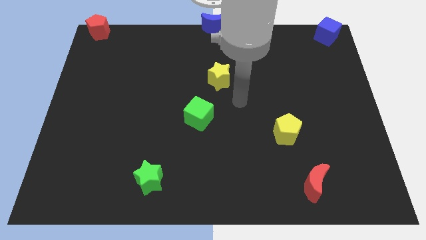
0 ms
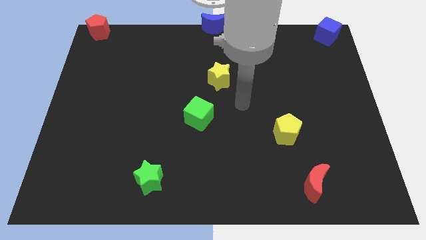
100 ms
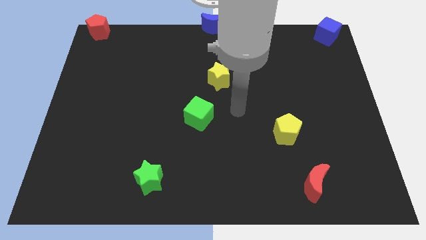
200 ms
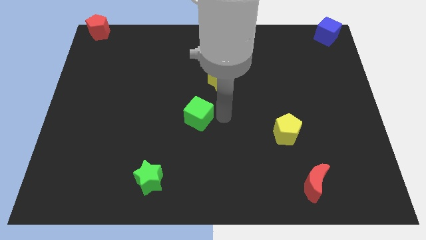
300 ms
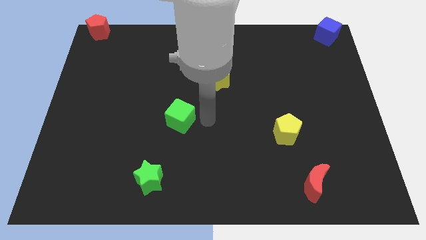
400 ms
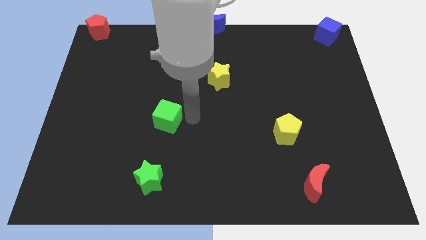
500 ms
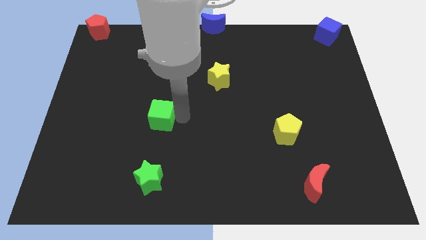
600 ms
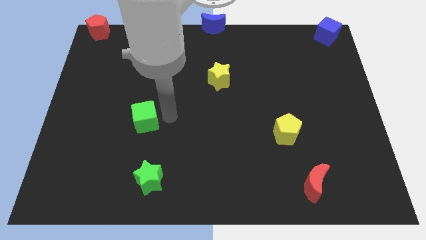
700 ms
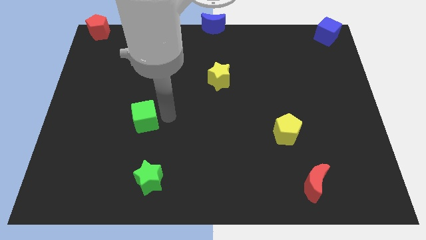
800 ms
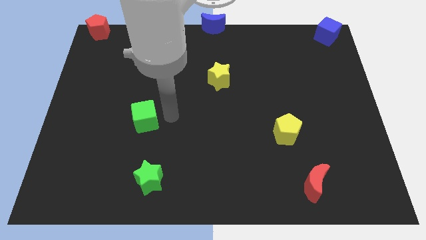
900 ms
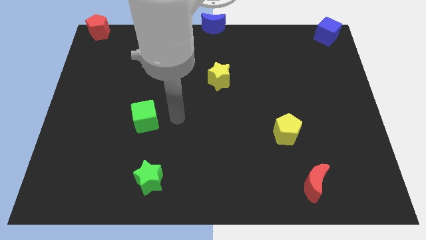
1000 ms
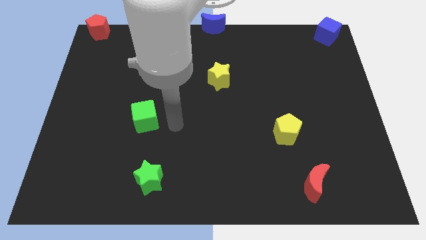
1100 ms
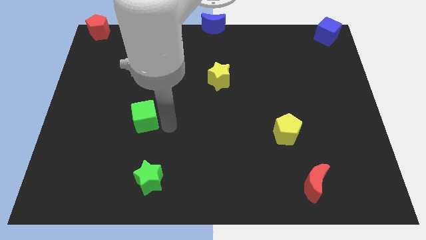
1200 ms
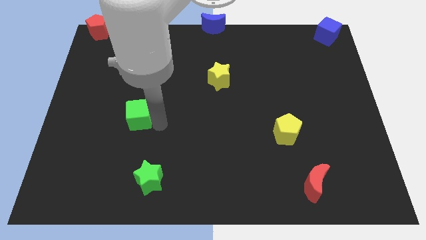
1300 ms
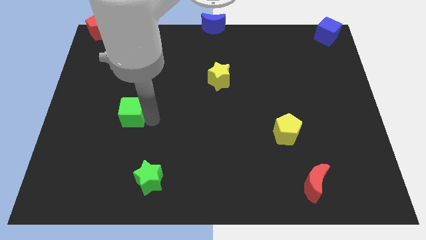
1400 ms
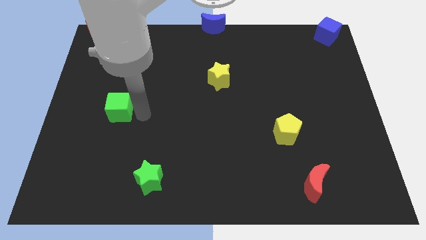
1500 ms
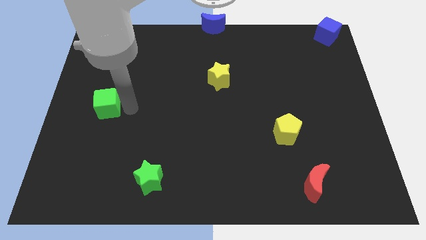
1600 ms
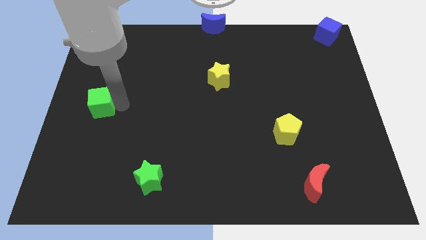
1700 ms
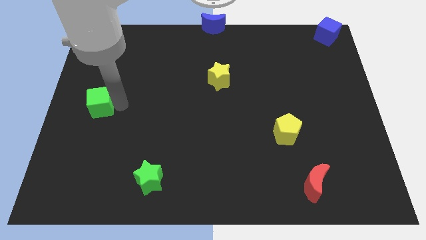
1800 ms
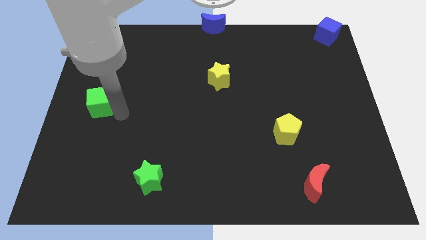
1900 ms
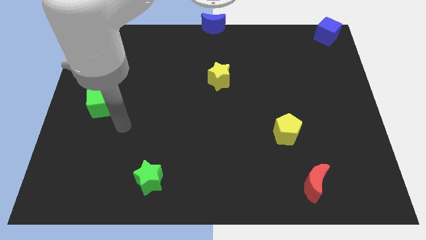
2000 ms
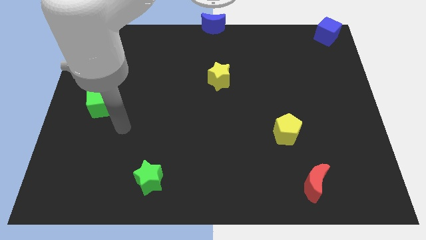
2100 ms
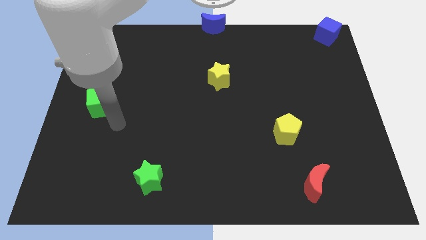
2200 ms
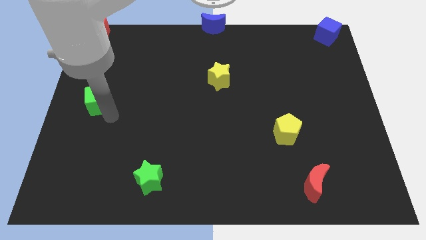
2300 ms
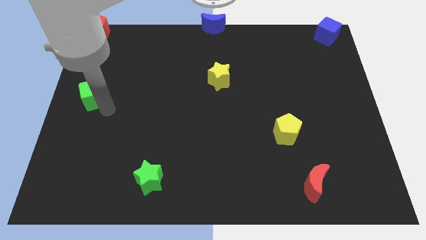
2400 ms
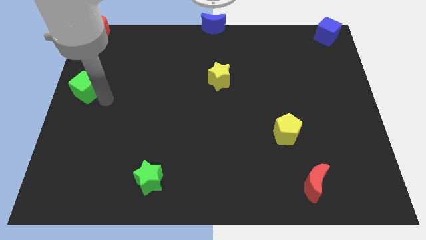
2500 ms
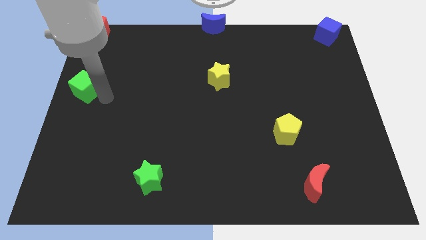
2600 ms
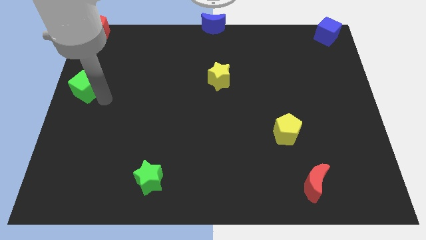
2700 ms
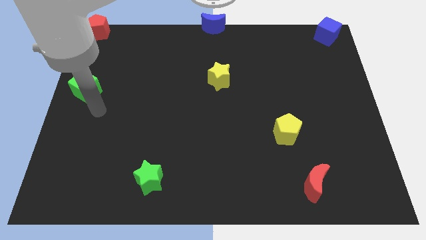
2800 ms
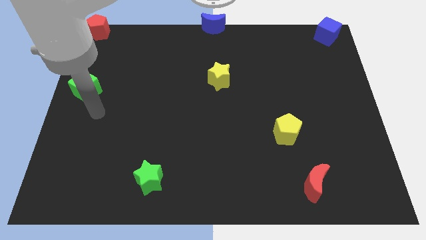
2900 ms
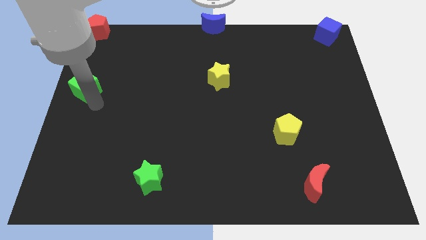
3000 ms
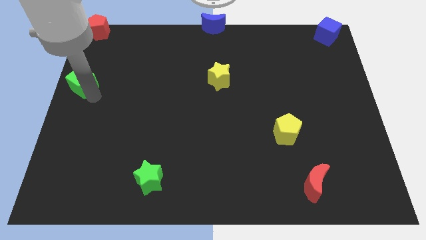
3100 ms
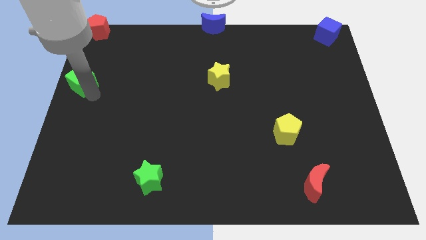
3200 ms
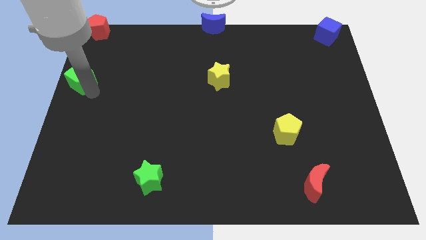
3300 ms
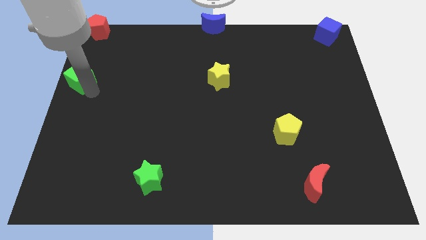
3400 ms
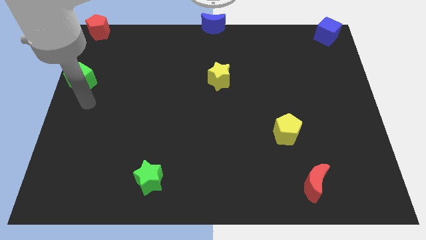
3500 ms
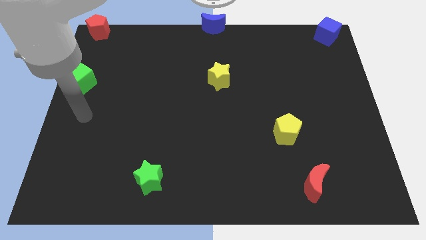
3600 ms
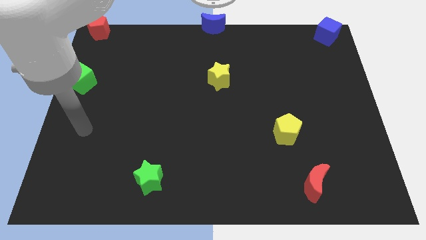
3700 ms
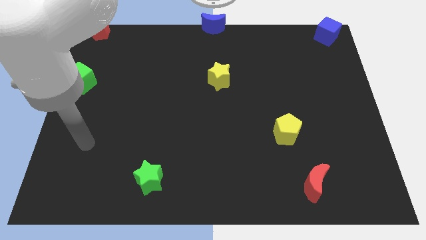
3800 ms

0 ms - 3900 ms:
push the green cube vertically to the bottom side of the red pentagon

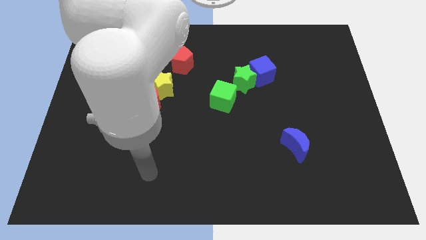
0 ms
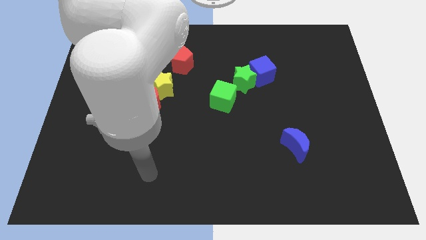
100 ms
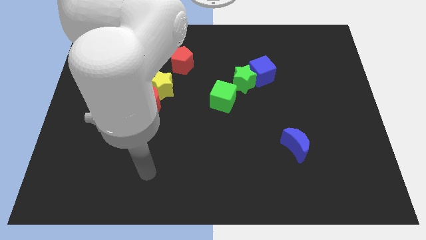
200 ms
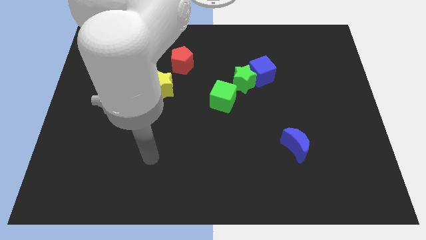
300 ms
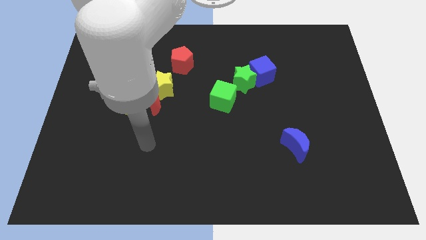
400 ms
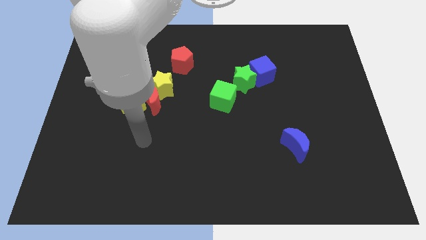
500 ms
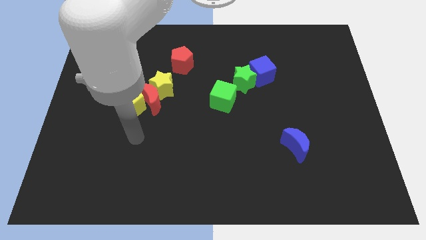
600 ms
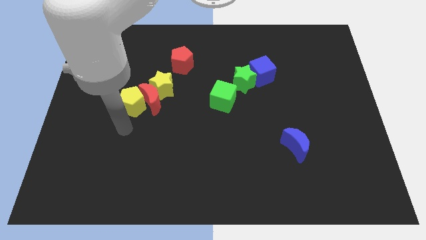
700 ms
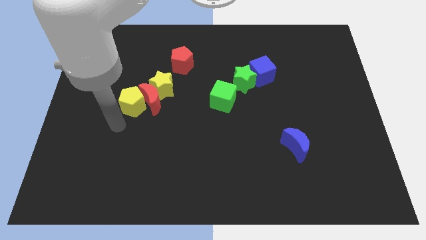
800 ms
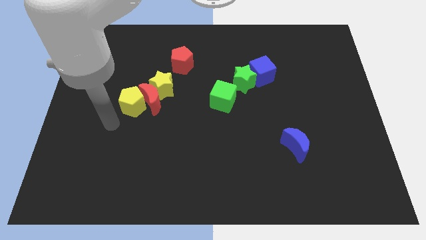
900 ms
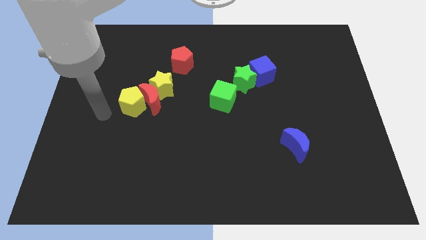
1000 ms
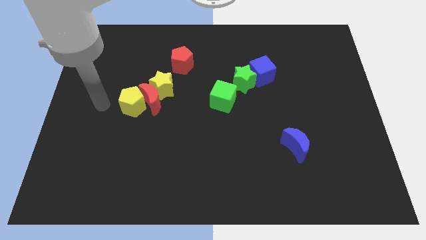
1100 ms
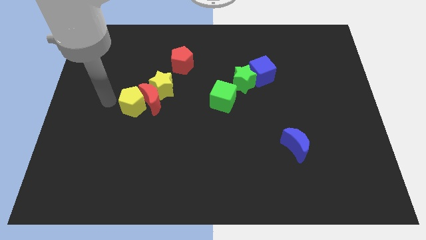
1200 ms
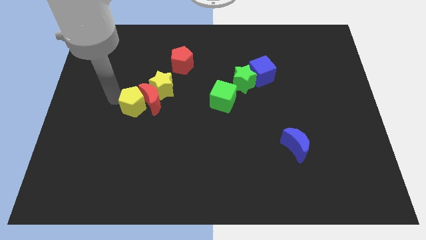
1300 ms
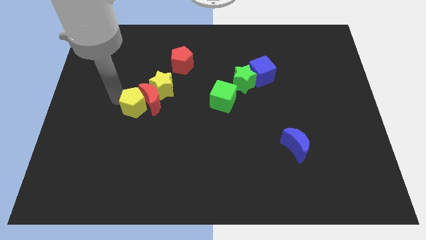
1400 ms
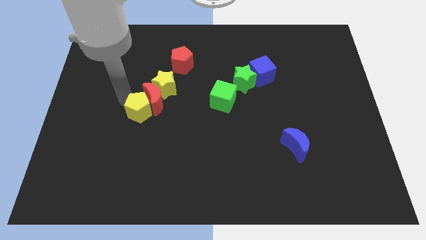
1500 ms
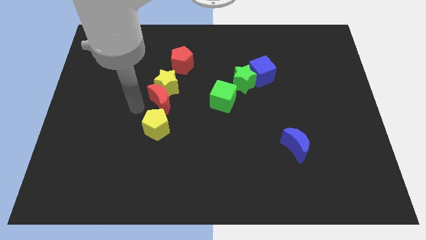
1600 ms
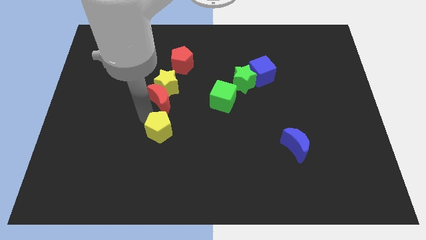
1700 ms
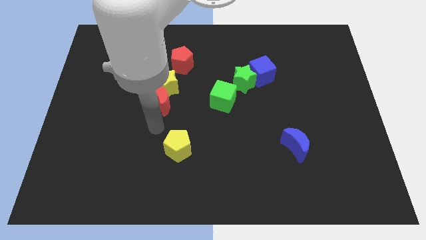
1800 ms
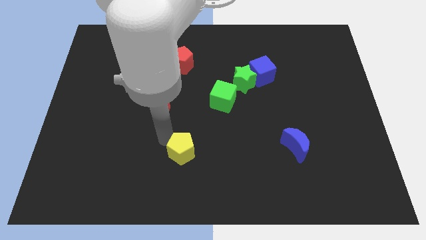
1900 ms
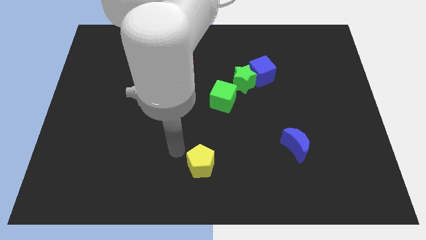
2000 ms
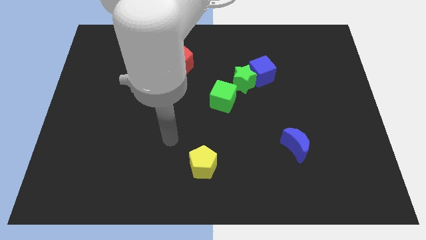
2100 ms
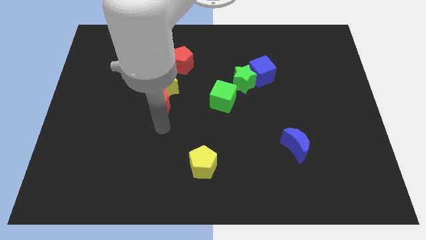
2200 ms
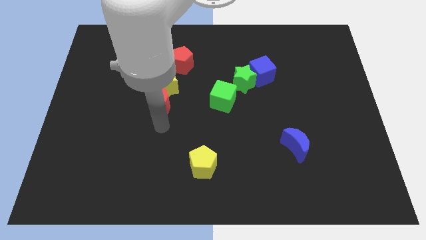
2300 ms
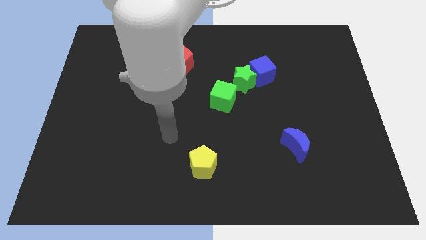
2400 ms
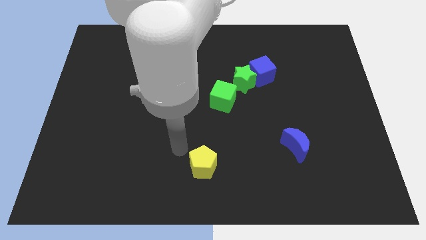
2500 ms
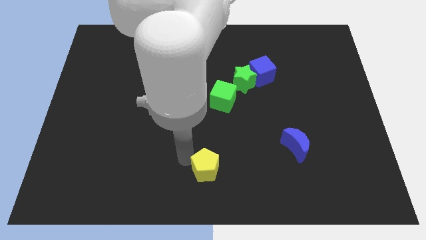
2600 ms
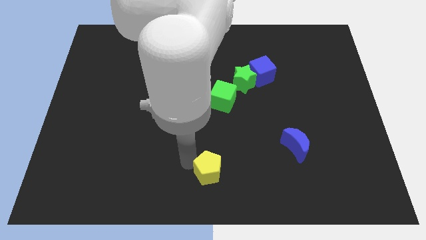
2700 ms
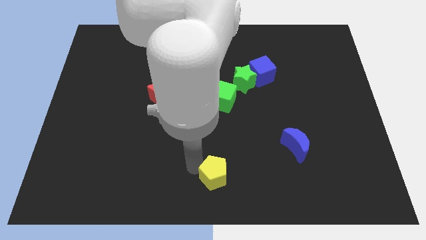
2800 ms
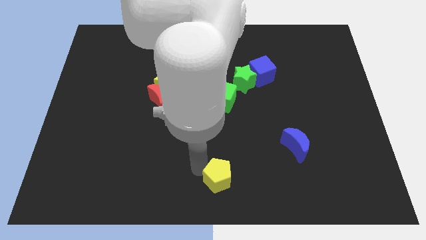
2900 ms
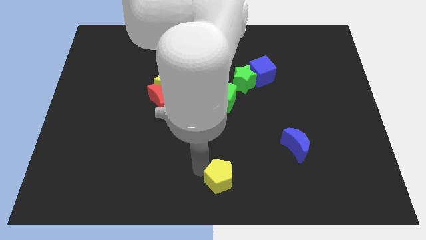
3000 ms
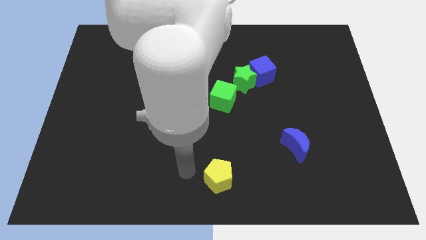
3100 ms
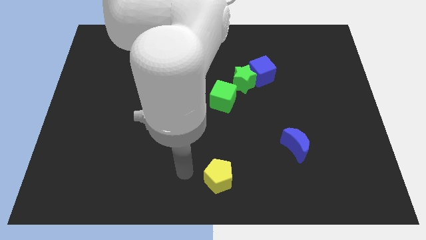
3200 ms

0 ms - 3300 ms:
move the yellow pentagon to the vertical bottom side of the green cube

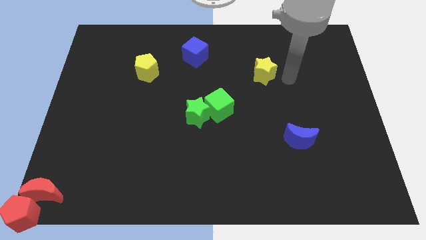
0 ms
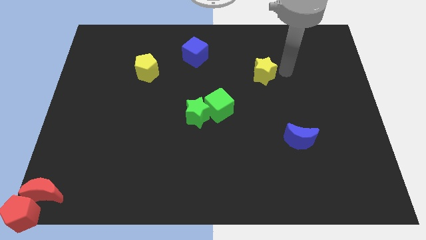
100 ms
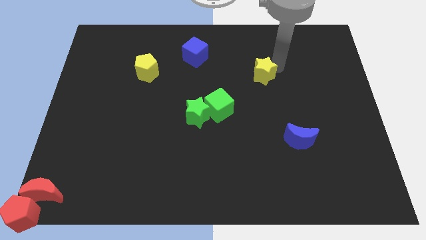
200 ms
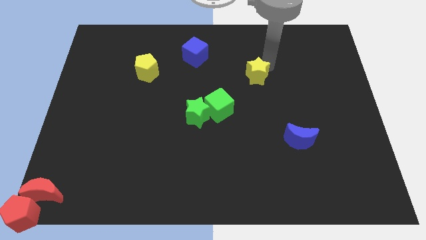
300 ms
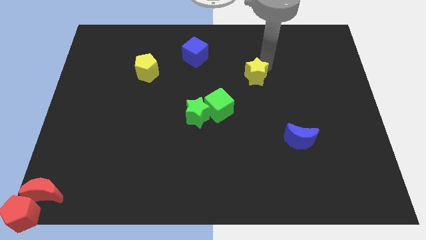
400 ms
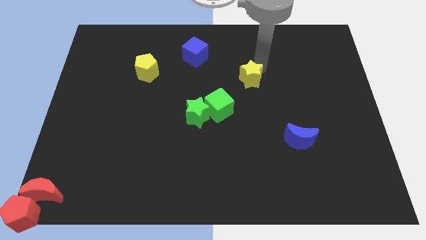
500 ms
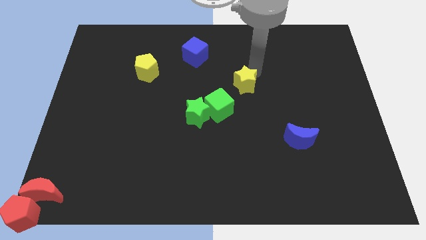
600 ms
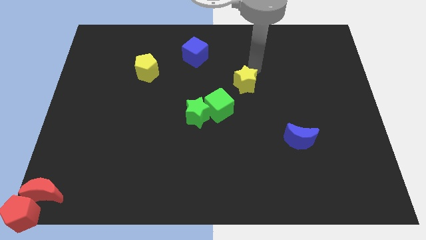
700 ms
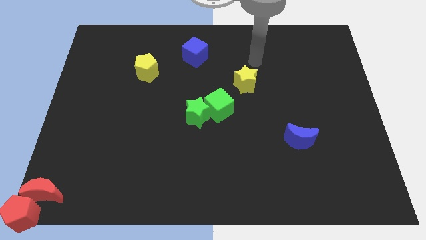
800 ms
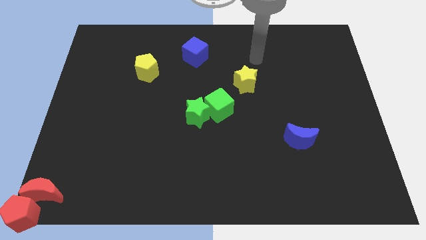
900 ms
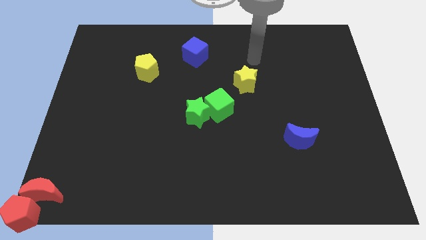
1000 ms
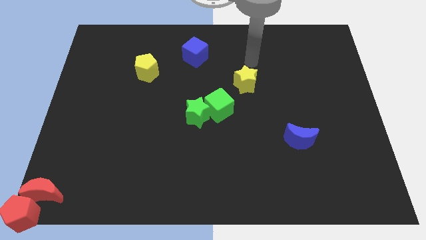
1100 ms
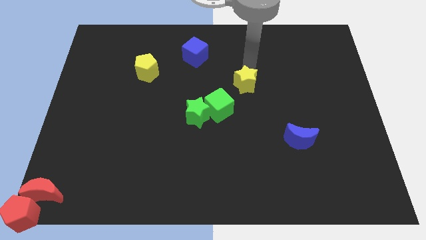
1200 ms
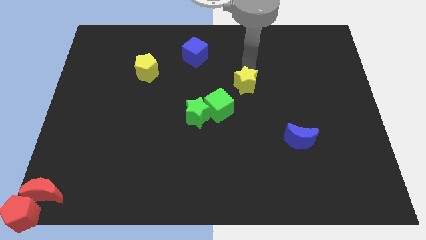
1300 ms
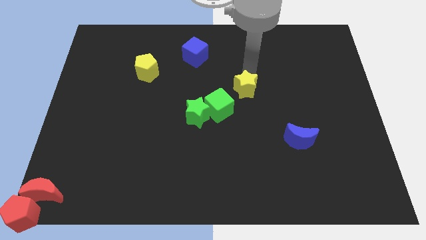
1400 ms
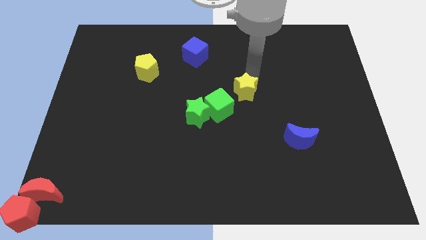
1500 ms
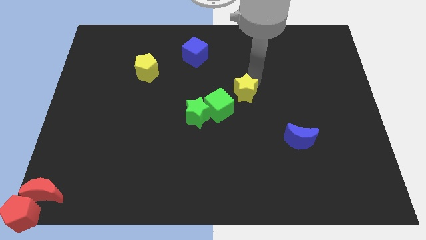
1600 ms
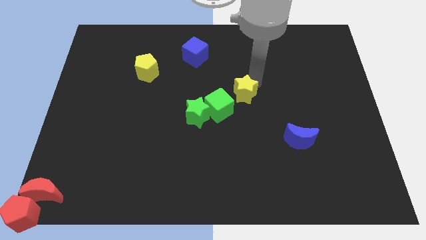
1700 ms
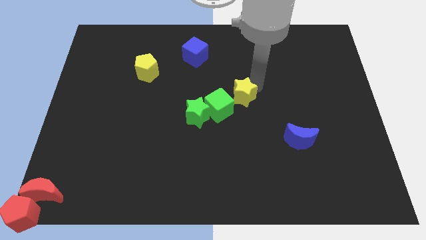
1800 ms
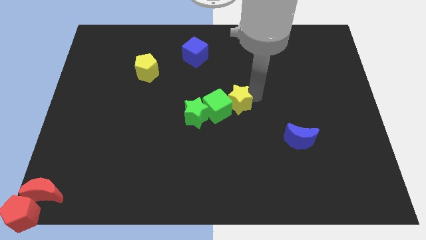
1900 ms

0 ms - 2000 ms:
push yellow star close to green cube
